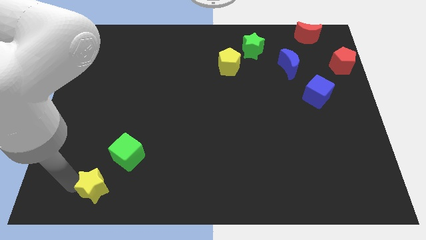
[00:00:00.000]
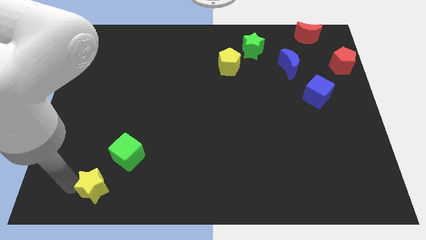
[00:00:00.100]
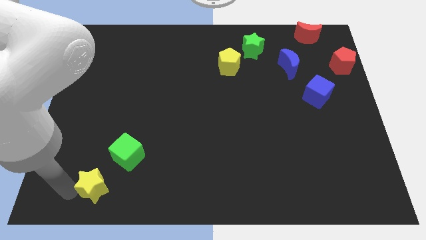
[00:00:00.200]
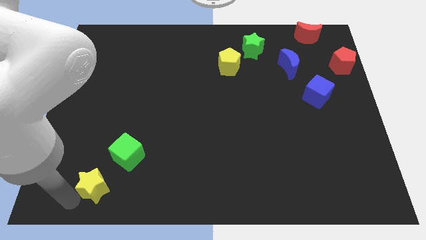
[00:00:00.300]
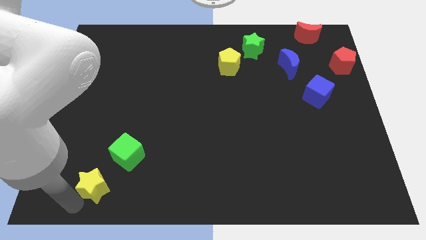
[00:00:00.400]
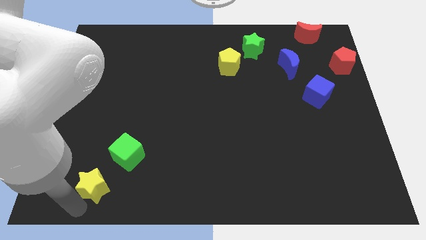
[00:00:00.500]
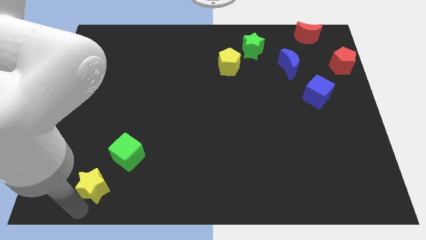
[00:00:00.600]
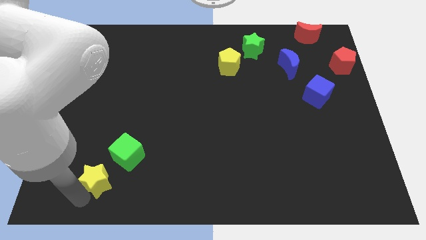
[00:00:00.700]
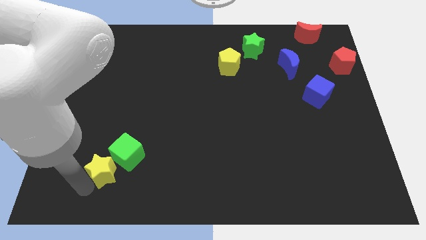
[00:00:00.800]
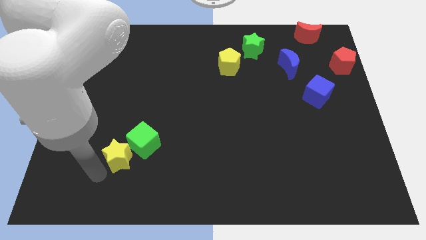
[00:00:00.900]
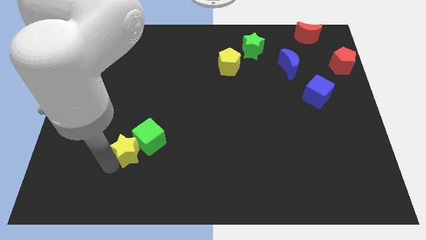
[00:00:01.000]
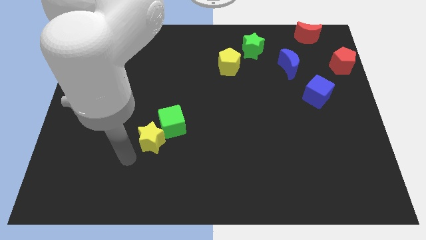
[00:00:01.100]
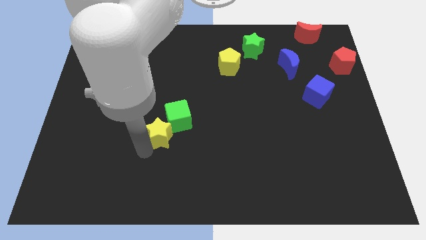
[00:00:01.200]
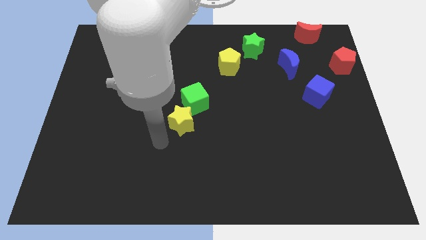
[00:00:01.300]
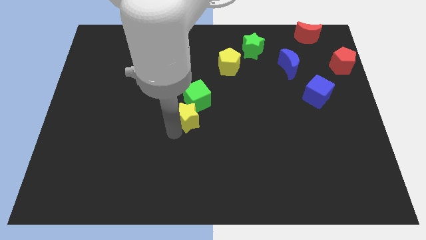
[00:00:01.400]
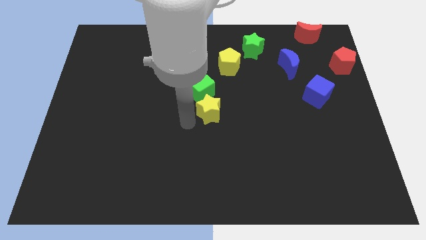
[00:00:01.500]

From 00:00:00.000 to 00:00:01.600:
push the yellow star to the bottom side of the green cube

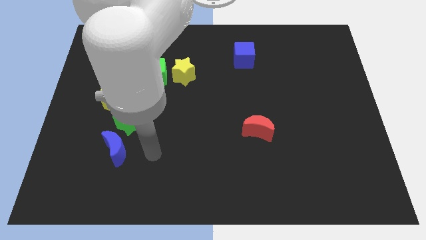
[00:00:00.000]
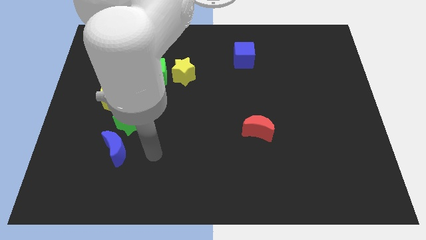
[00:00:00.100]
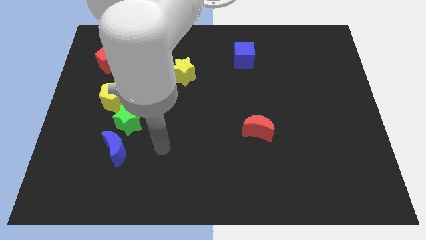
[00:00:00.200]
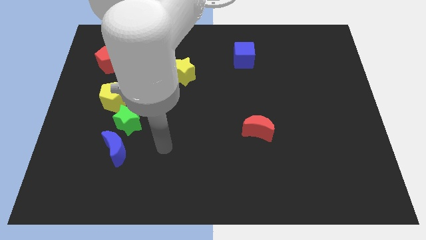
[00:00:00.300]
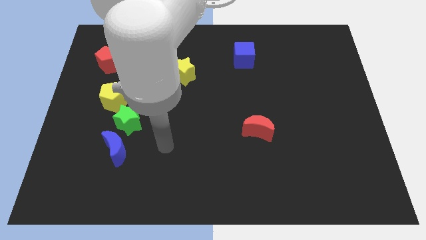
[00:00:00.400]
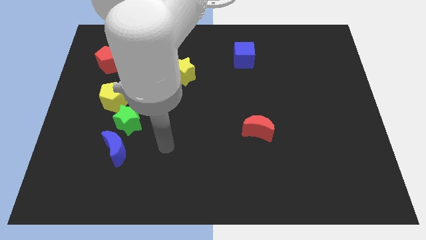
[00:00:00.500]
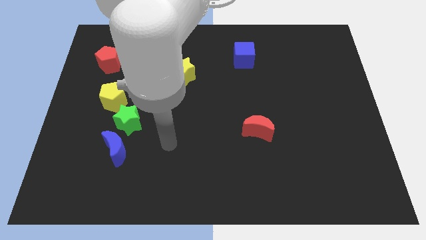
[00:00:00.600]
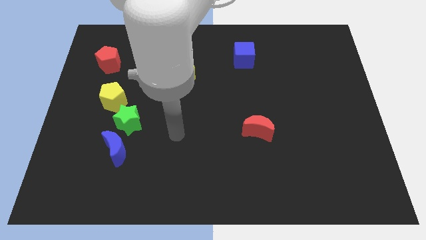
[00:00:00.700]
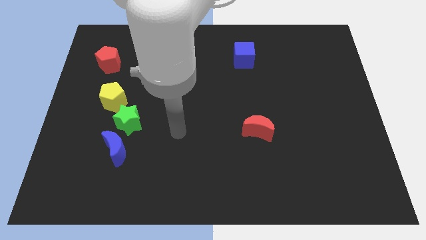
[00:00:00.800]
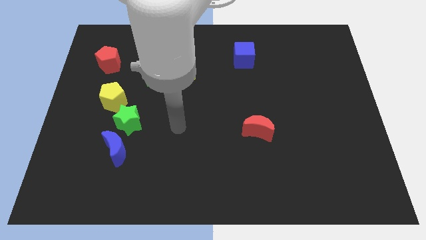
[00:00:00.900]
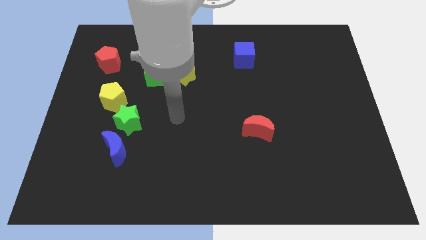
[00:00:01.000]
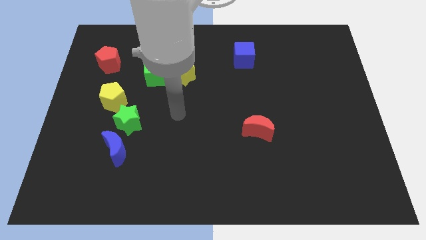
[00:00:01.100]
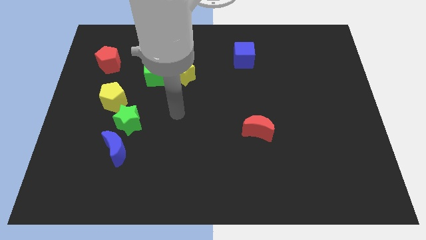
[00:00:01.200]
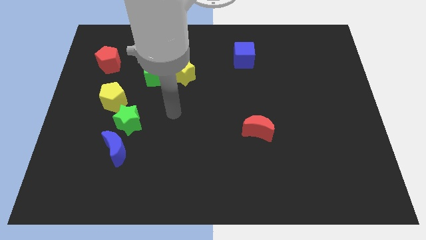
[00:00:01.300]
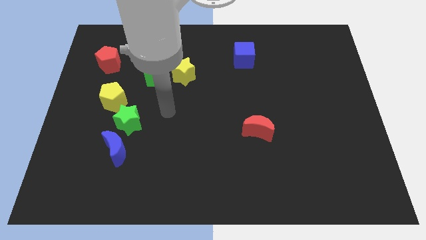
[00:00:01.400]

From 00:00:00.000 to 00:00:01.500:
place your arm below green cube

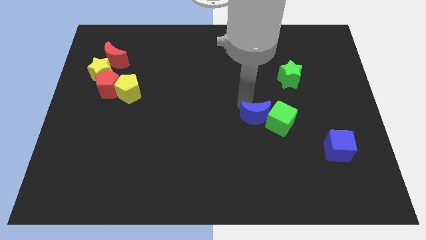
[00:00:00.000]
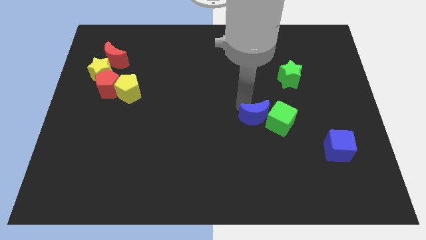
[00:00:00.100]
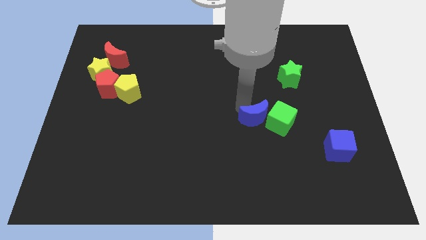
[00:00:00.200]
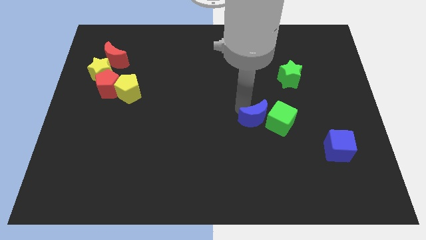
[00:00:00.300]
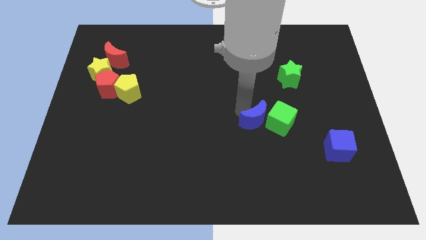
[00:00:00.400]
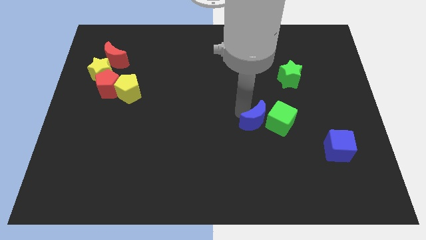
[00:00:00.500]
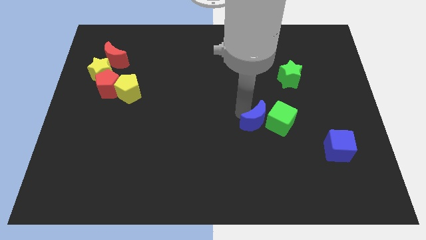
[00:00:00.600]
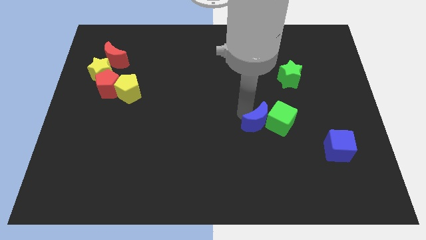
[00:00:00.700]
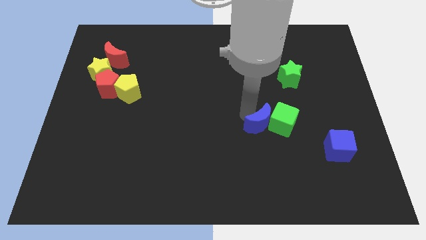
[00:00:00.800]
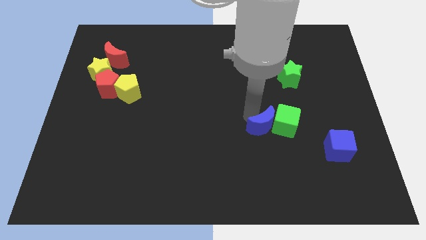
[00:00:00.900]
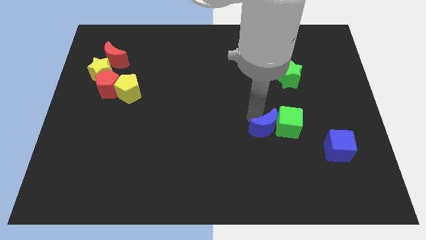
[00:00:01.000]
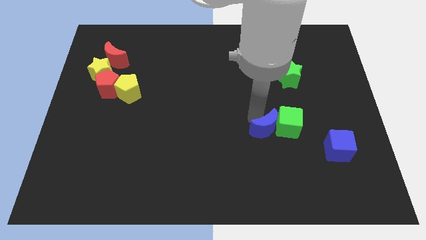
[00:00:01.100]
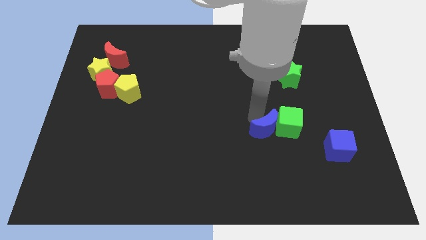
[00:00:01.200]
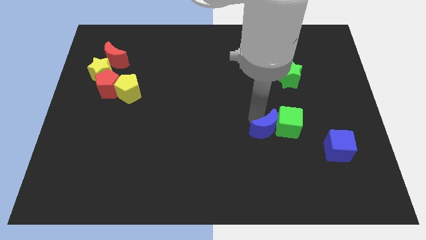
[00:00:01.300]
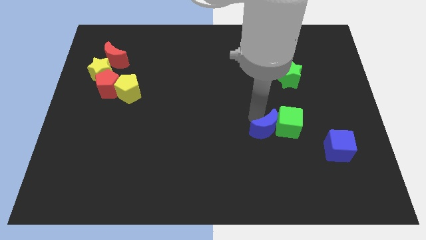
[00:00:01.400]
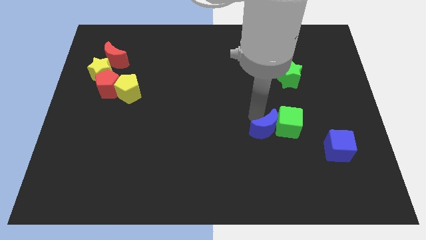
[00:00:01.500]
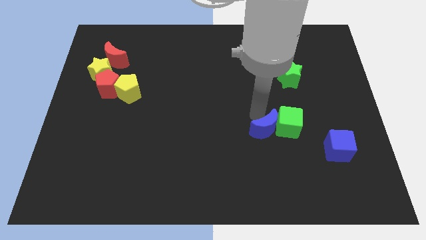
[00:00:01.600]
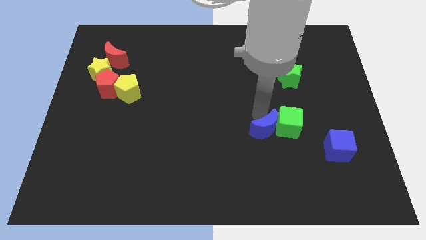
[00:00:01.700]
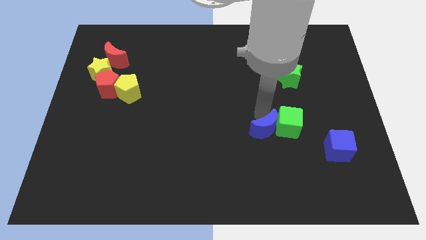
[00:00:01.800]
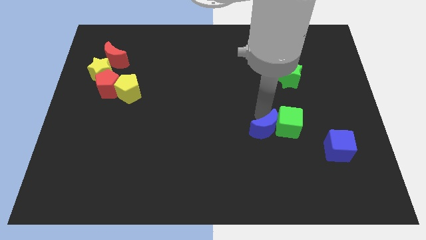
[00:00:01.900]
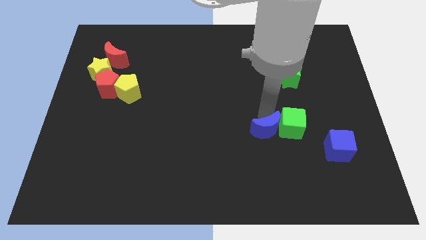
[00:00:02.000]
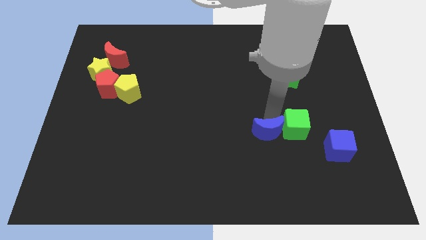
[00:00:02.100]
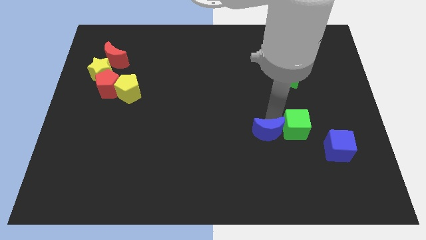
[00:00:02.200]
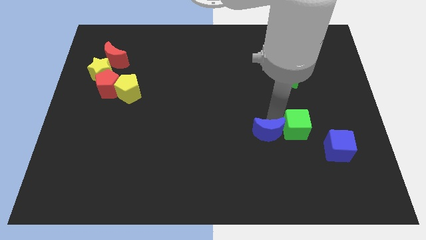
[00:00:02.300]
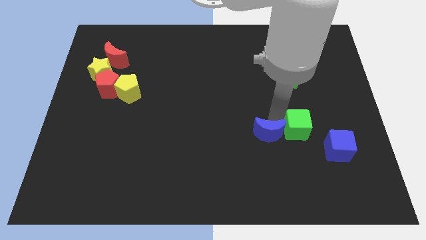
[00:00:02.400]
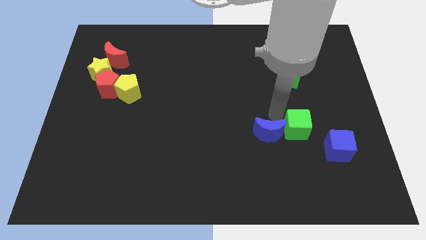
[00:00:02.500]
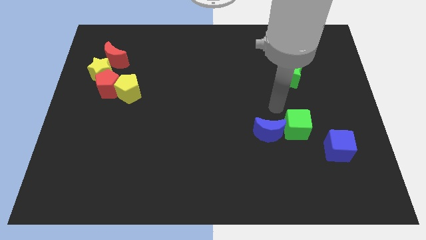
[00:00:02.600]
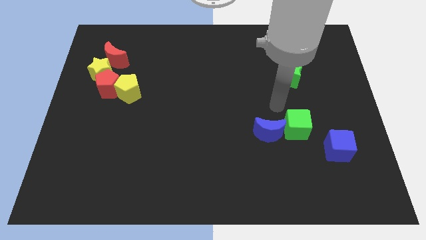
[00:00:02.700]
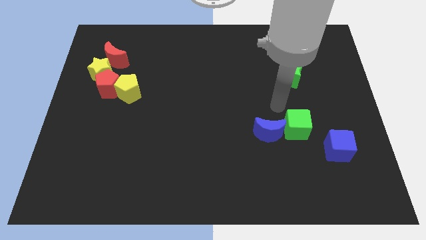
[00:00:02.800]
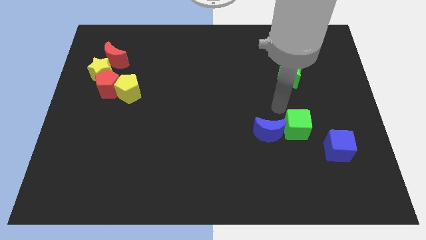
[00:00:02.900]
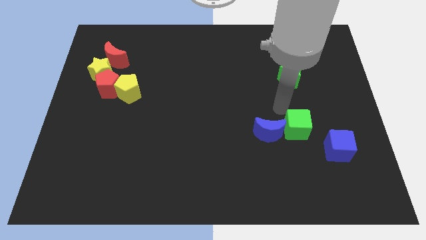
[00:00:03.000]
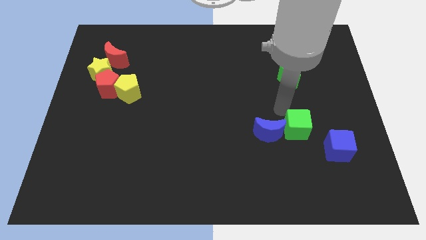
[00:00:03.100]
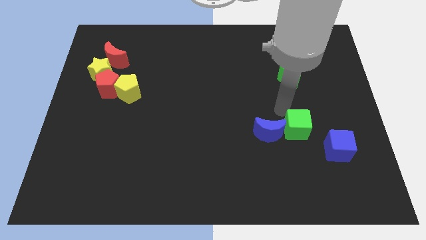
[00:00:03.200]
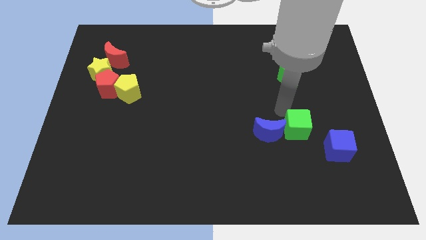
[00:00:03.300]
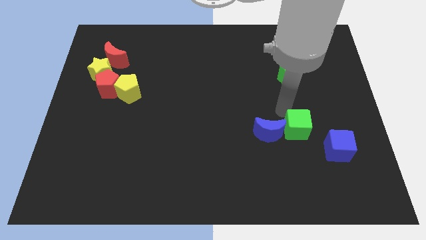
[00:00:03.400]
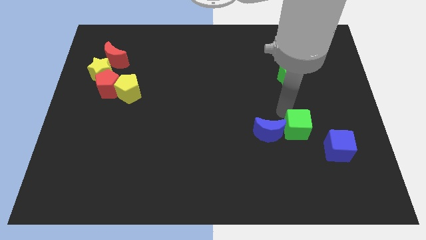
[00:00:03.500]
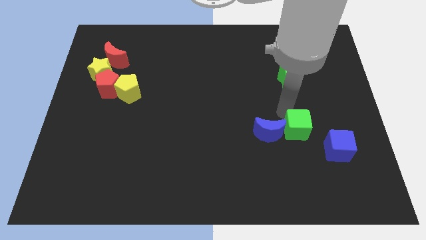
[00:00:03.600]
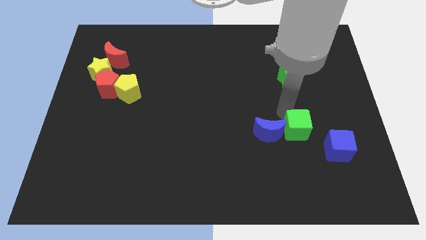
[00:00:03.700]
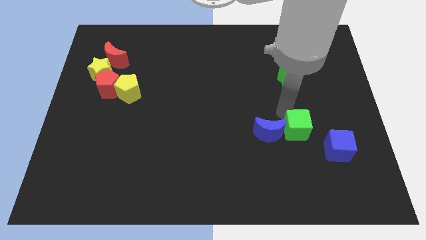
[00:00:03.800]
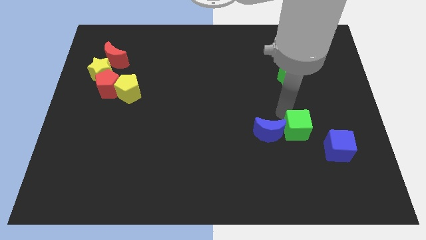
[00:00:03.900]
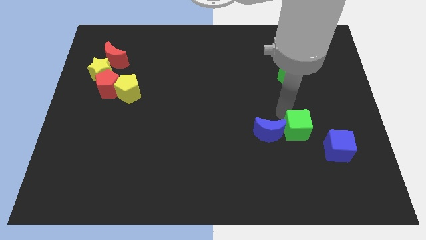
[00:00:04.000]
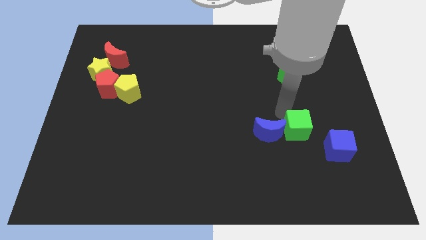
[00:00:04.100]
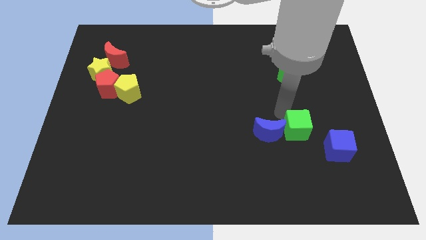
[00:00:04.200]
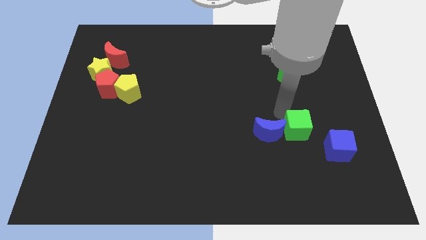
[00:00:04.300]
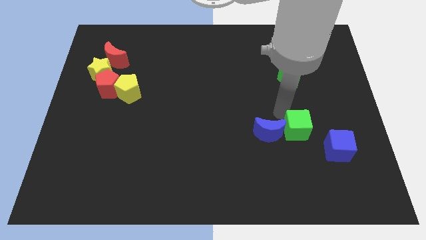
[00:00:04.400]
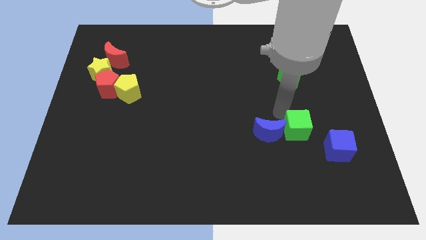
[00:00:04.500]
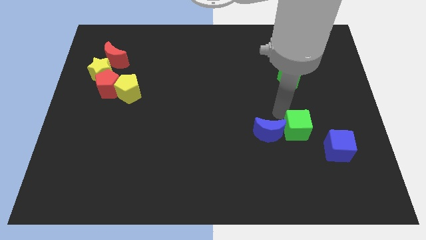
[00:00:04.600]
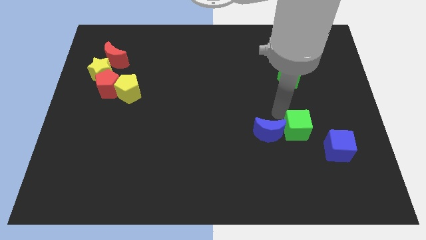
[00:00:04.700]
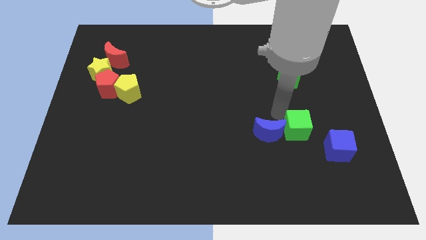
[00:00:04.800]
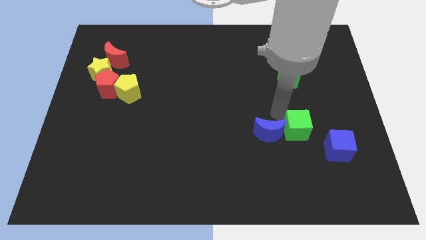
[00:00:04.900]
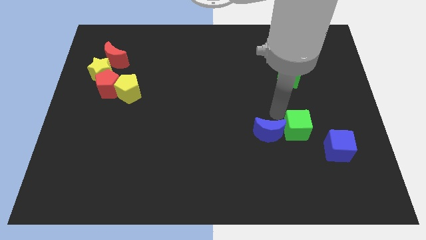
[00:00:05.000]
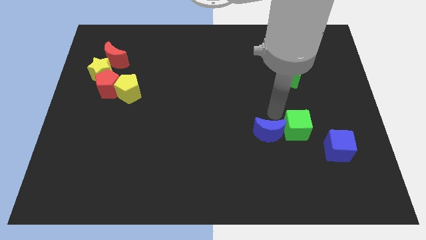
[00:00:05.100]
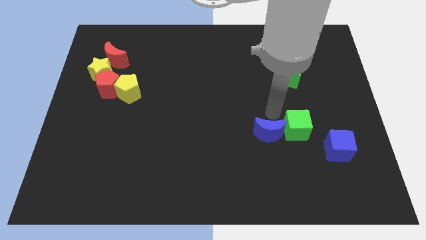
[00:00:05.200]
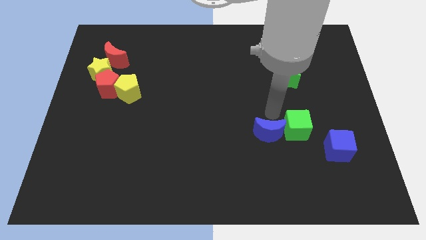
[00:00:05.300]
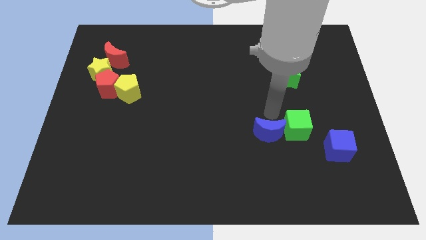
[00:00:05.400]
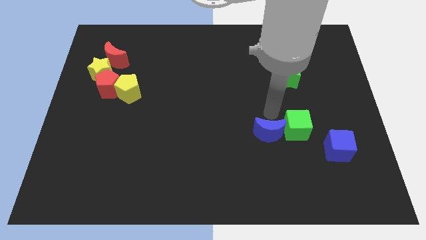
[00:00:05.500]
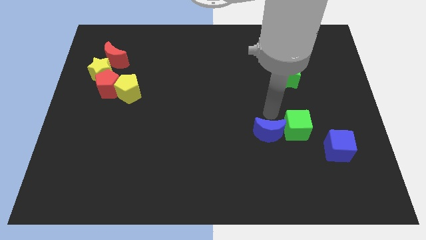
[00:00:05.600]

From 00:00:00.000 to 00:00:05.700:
move the green cube and the blue moon to the left of the blue cube

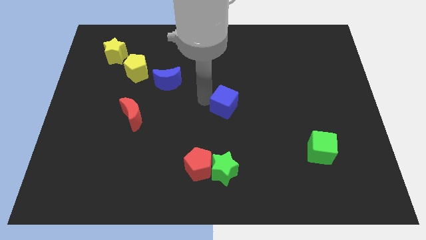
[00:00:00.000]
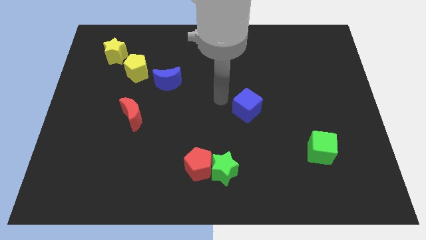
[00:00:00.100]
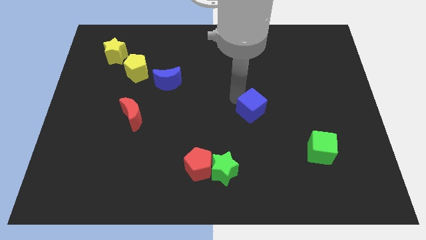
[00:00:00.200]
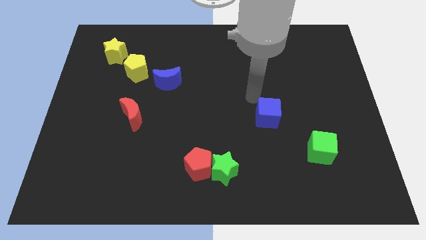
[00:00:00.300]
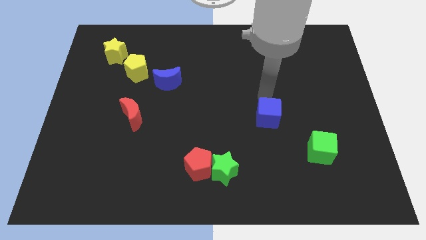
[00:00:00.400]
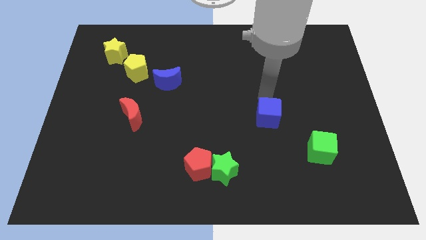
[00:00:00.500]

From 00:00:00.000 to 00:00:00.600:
move the blue cube vertical to the green cube
